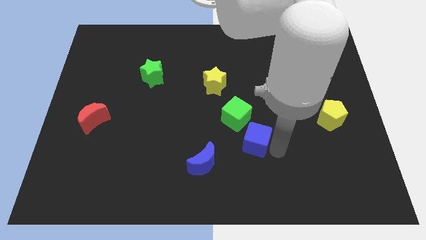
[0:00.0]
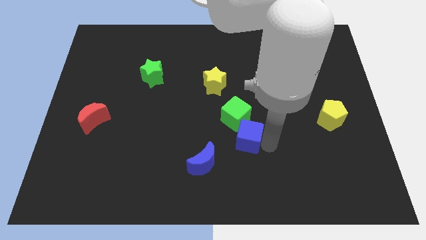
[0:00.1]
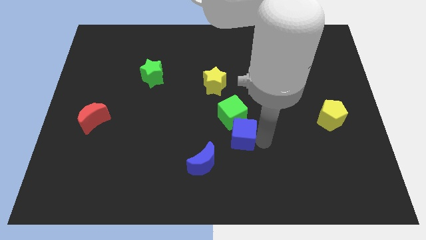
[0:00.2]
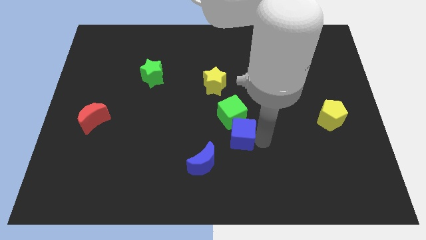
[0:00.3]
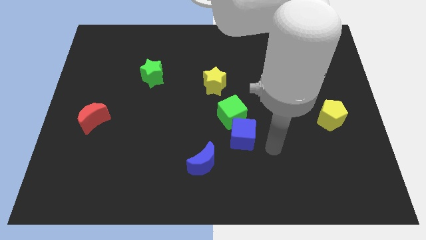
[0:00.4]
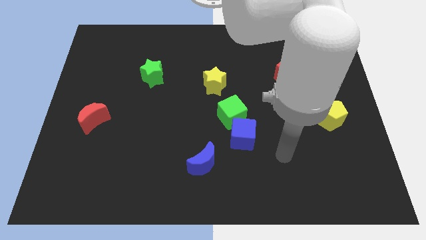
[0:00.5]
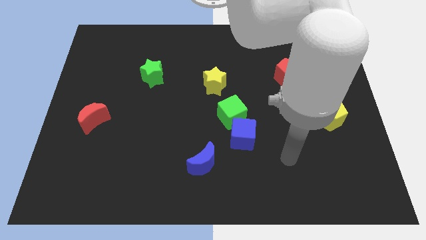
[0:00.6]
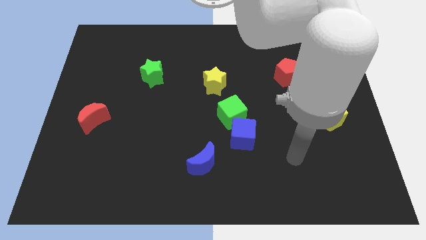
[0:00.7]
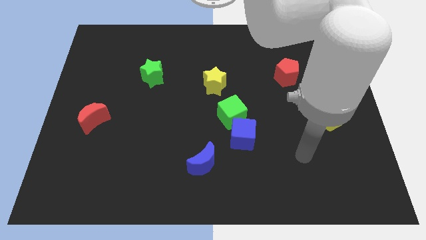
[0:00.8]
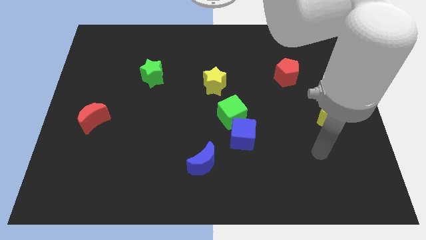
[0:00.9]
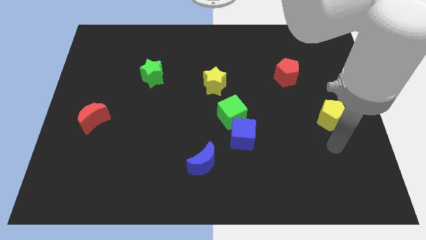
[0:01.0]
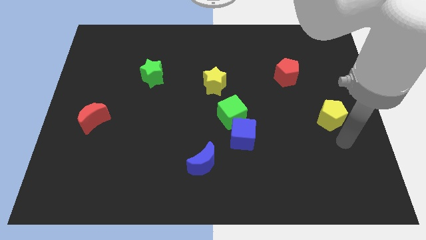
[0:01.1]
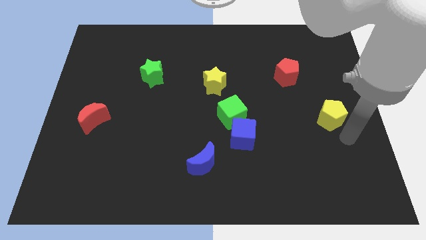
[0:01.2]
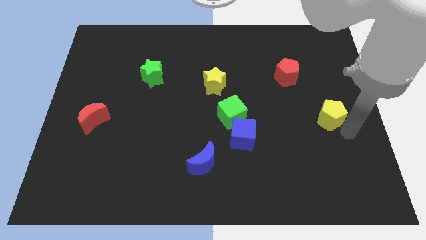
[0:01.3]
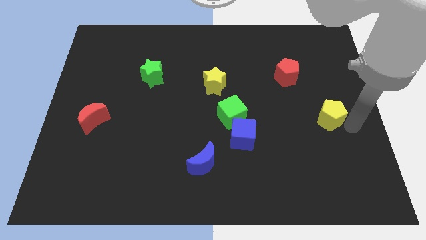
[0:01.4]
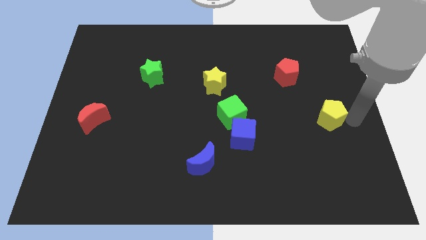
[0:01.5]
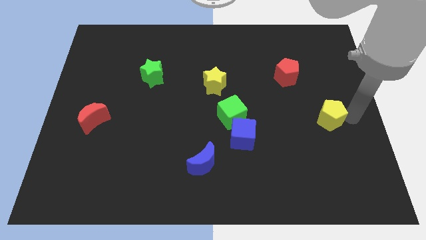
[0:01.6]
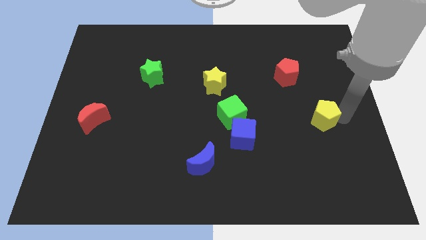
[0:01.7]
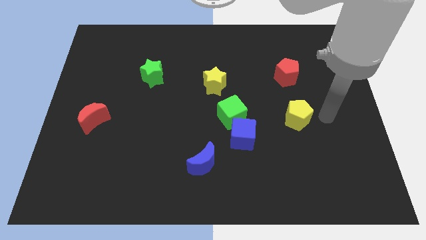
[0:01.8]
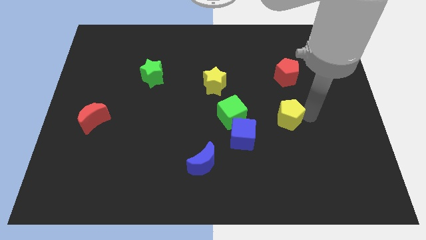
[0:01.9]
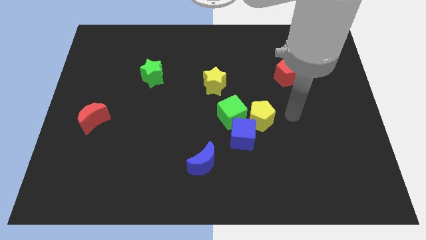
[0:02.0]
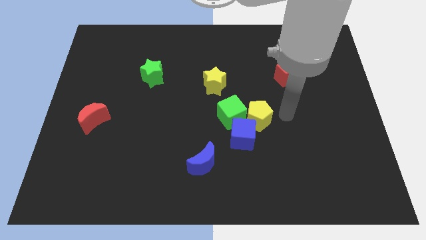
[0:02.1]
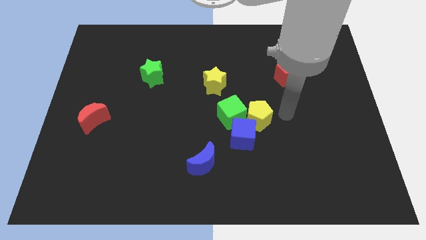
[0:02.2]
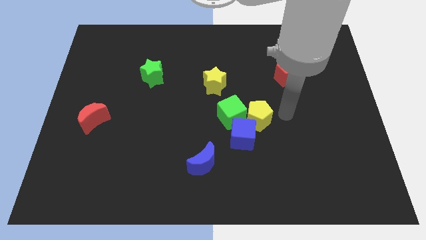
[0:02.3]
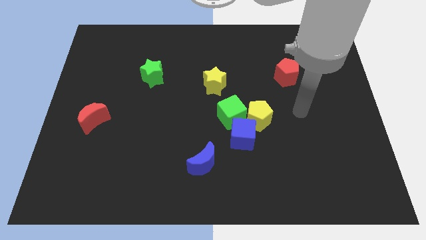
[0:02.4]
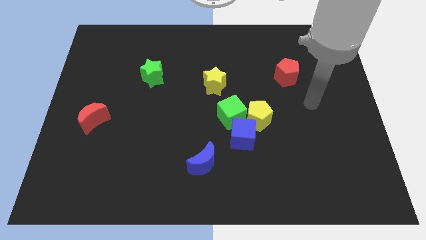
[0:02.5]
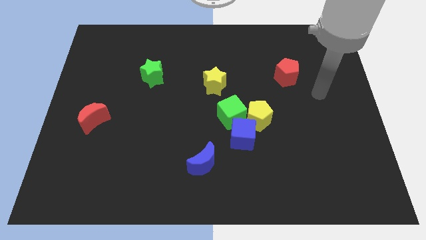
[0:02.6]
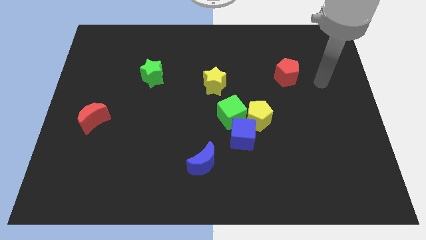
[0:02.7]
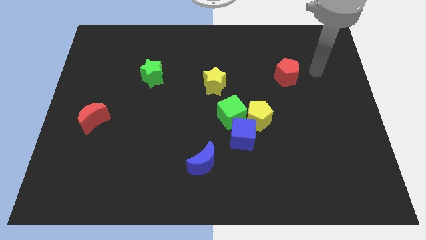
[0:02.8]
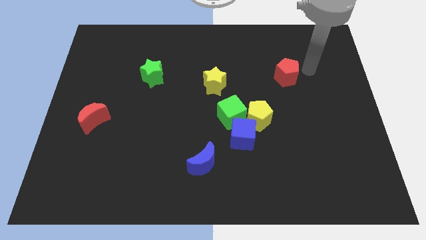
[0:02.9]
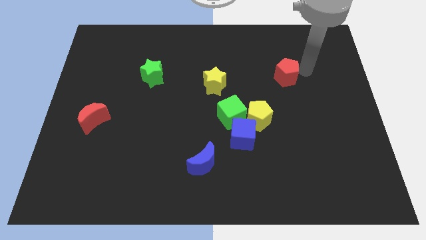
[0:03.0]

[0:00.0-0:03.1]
push the yellow pentagon towards the center of the board

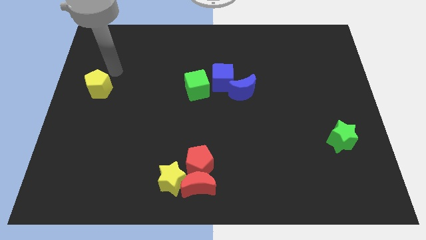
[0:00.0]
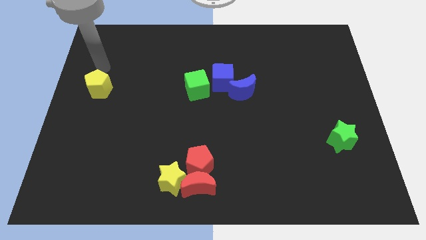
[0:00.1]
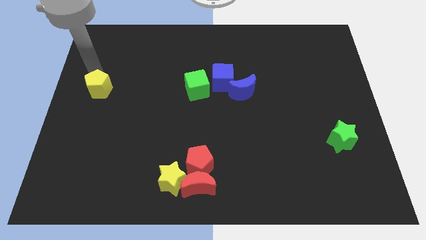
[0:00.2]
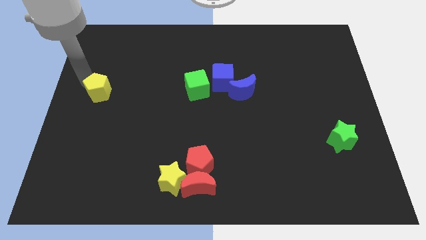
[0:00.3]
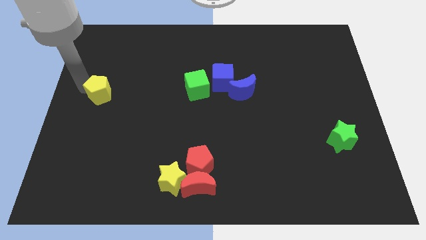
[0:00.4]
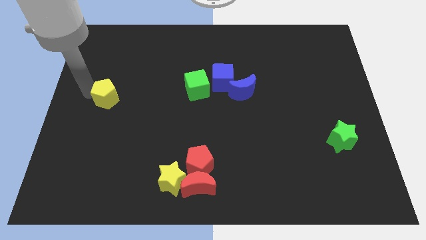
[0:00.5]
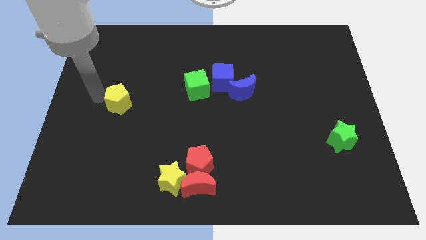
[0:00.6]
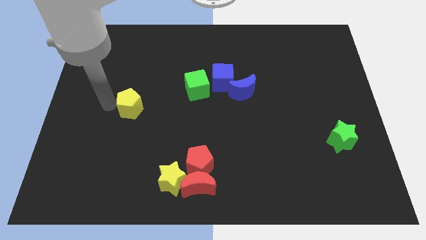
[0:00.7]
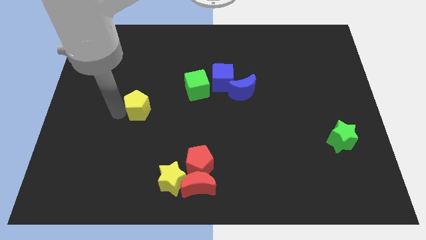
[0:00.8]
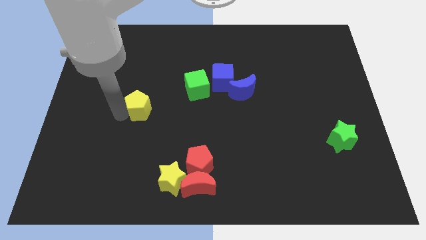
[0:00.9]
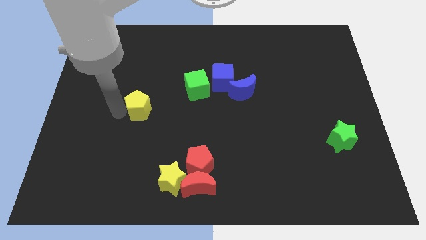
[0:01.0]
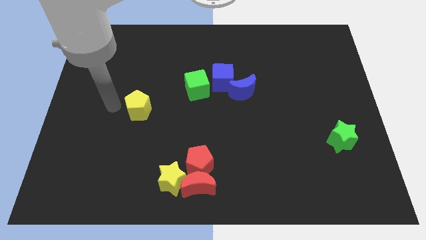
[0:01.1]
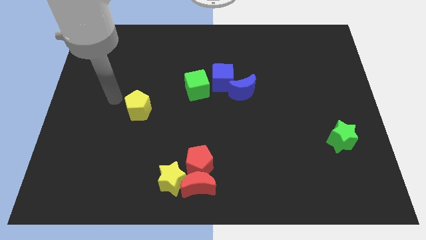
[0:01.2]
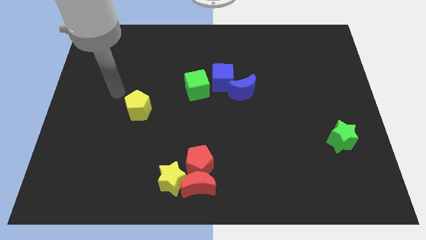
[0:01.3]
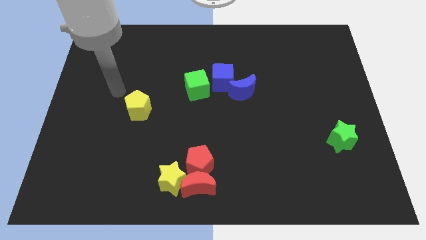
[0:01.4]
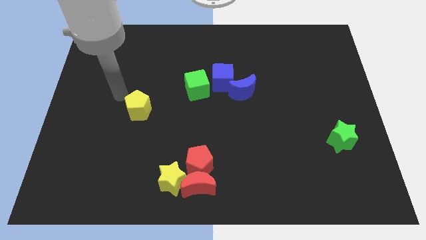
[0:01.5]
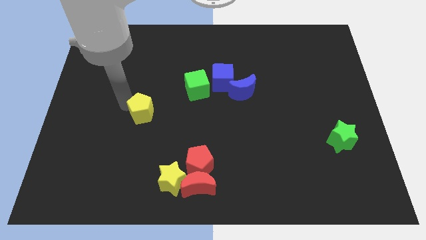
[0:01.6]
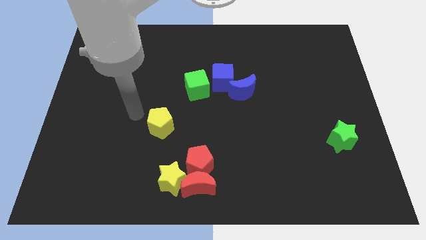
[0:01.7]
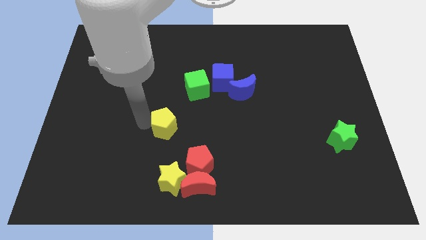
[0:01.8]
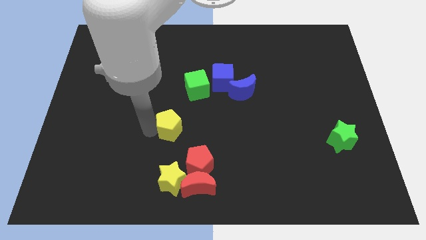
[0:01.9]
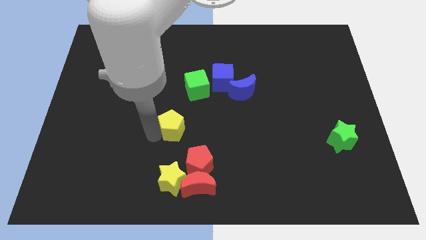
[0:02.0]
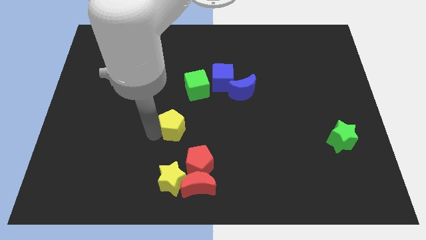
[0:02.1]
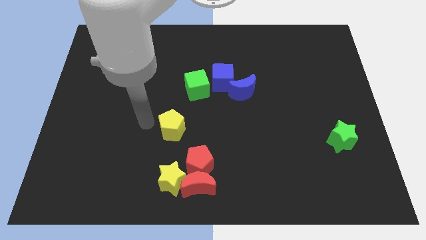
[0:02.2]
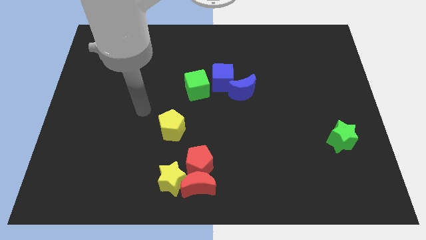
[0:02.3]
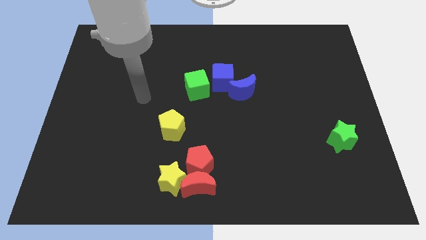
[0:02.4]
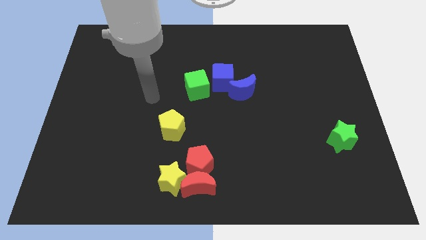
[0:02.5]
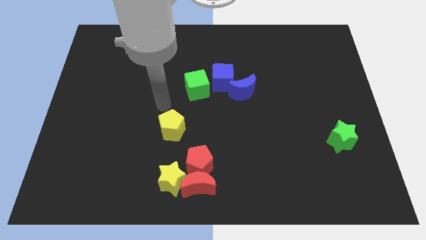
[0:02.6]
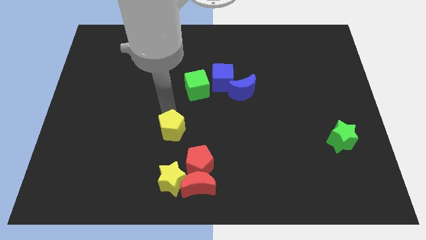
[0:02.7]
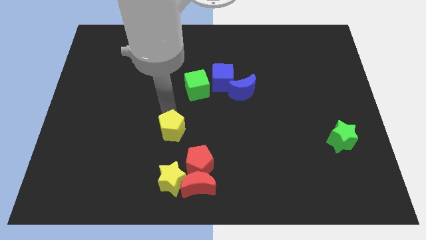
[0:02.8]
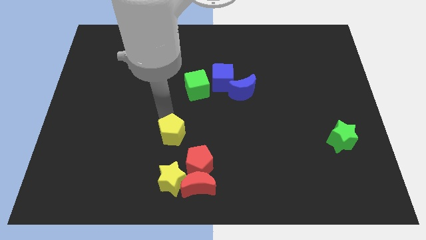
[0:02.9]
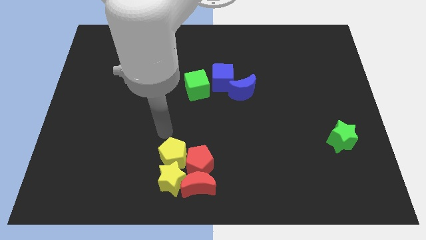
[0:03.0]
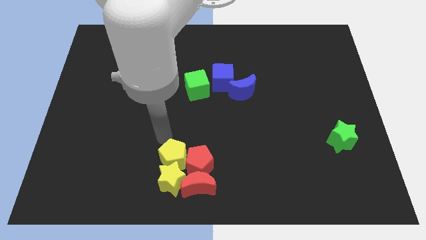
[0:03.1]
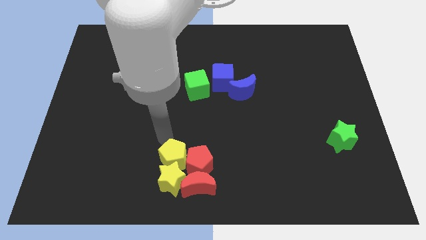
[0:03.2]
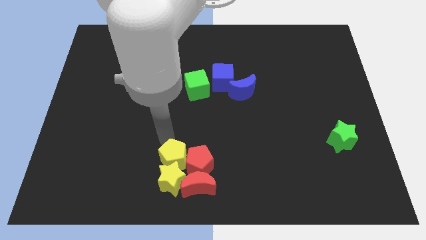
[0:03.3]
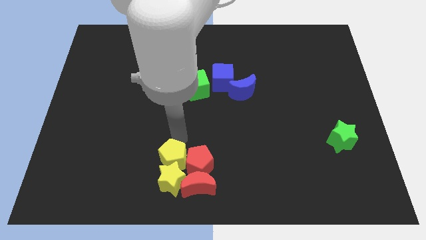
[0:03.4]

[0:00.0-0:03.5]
place yellow pentagon to the left side of red pentagon

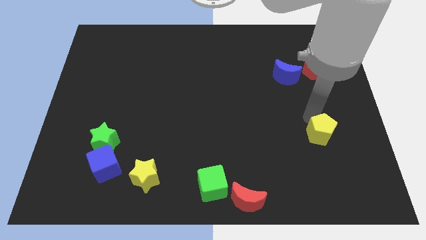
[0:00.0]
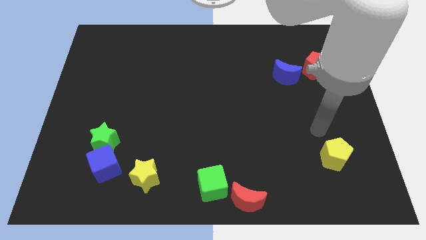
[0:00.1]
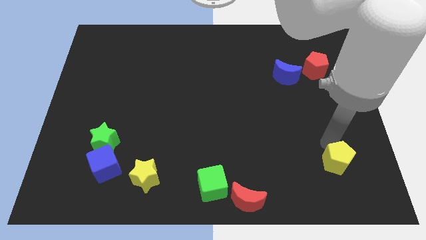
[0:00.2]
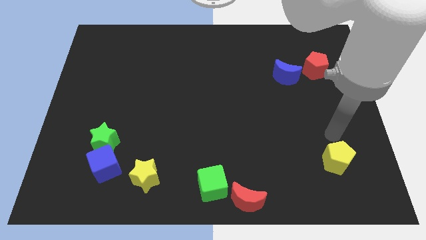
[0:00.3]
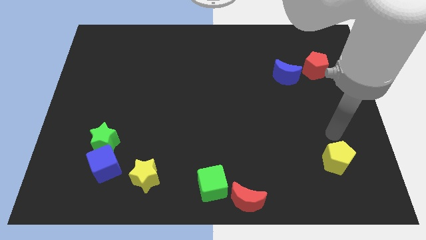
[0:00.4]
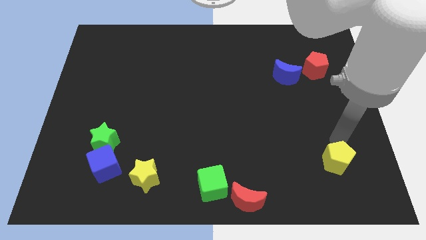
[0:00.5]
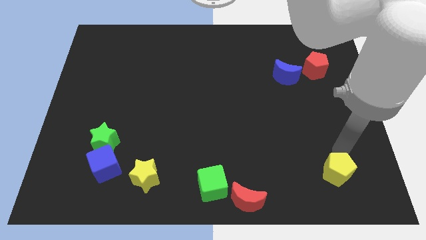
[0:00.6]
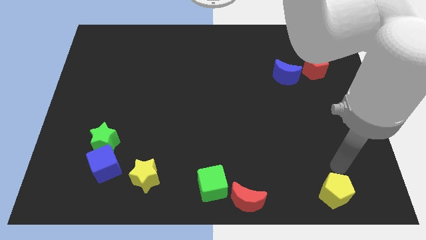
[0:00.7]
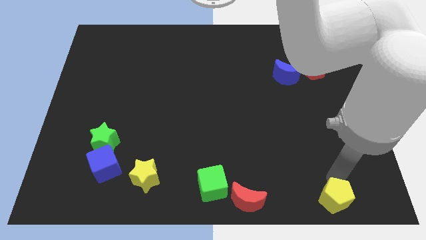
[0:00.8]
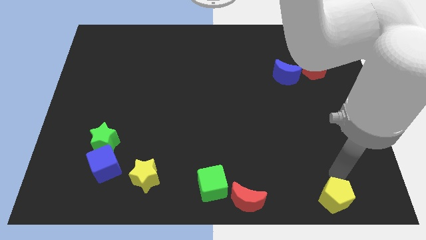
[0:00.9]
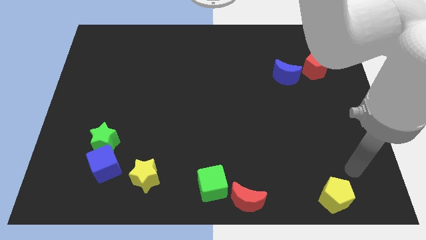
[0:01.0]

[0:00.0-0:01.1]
move the yellow pentagon to the right side of the red moon

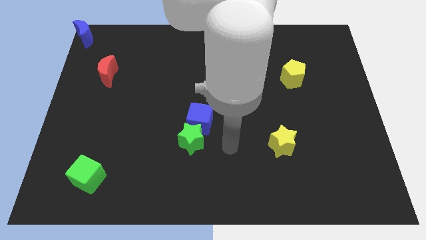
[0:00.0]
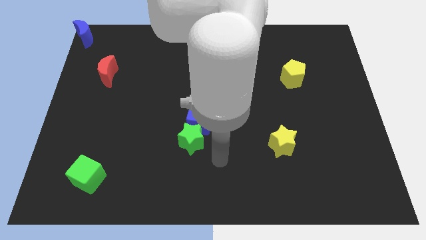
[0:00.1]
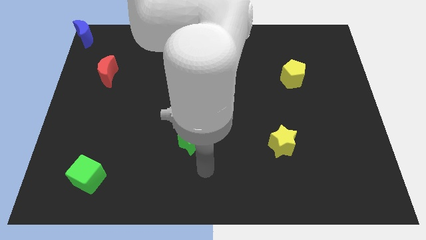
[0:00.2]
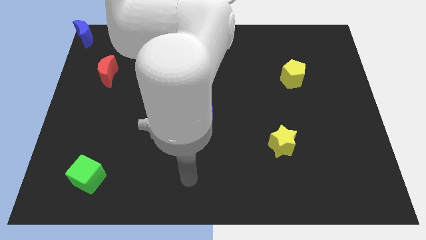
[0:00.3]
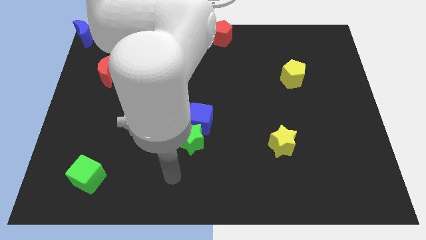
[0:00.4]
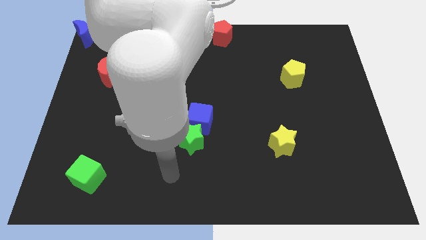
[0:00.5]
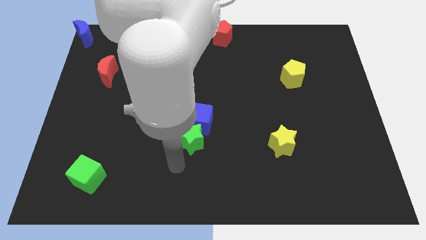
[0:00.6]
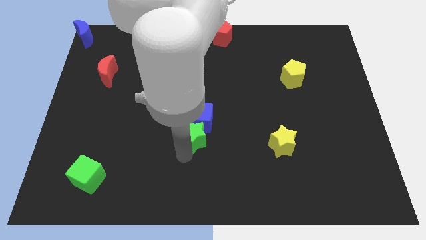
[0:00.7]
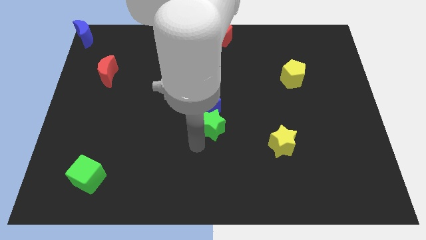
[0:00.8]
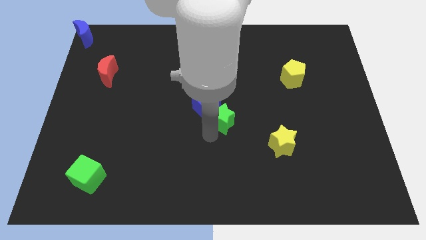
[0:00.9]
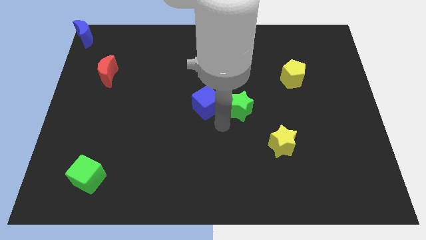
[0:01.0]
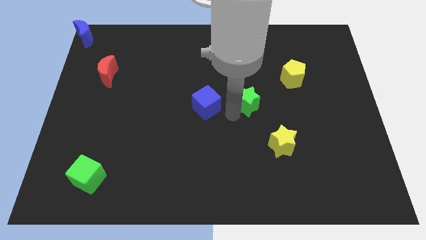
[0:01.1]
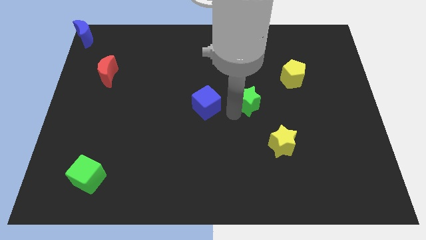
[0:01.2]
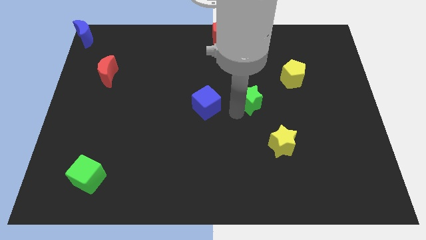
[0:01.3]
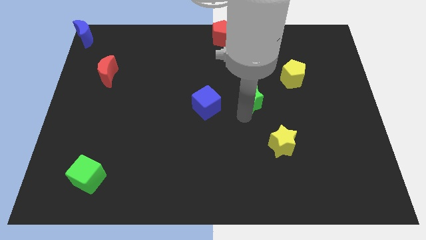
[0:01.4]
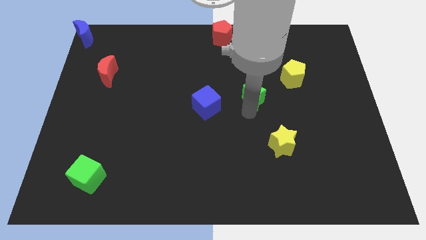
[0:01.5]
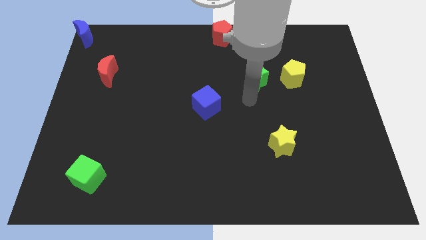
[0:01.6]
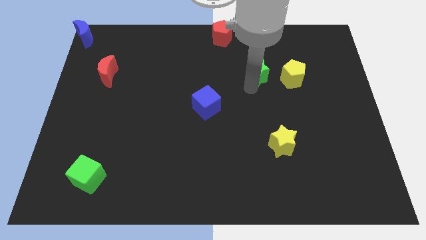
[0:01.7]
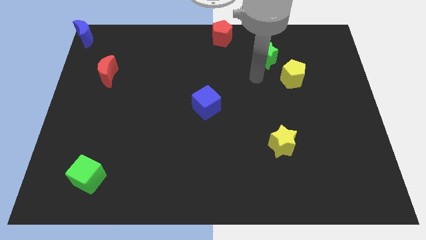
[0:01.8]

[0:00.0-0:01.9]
move the green star between pentagons
